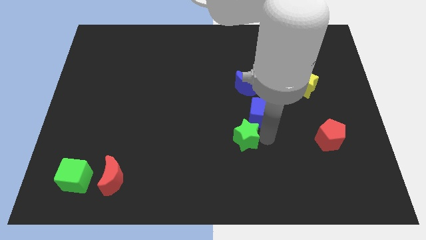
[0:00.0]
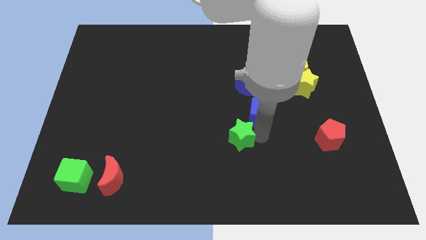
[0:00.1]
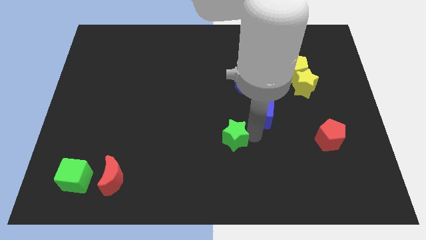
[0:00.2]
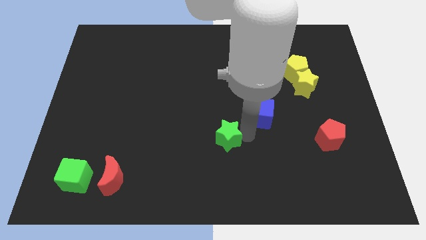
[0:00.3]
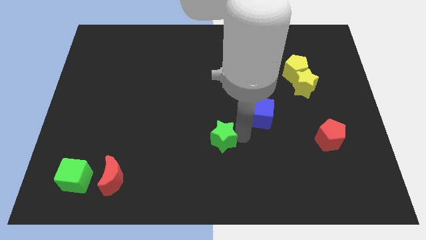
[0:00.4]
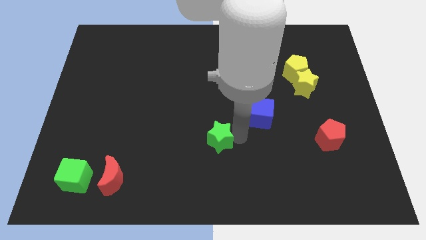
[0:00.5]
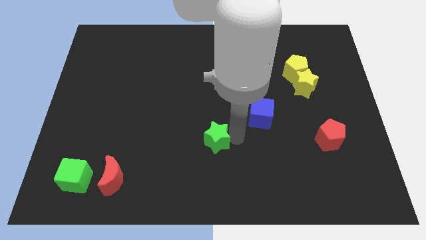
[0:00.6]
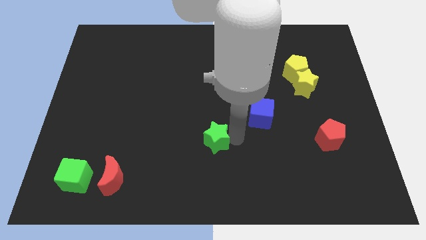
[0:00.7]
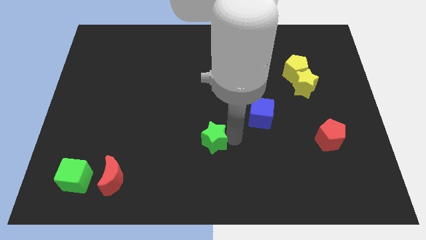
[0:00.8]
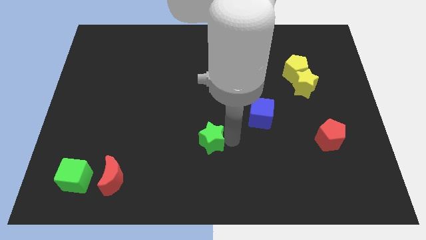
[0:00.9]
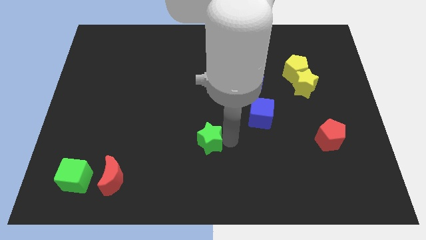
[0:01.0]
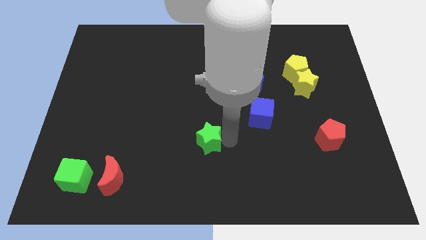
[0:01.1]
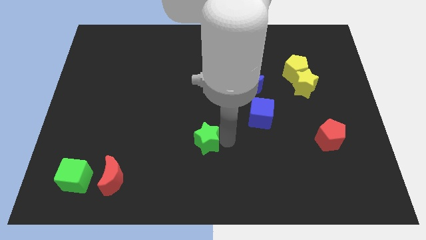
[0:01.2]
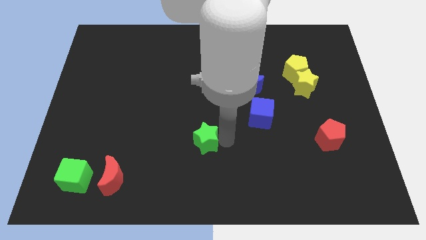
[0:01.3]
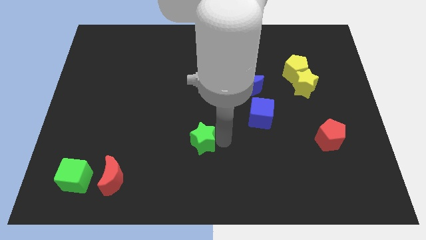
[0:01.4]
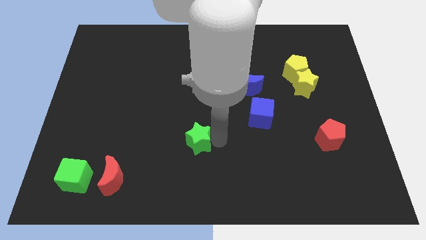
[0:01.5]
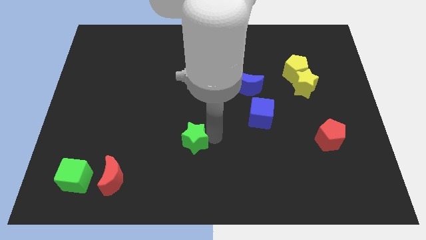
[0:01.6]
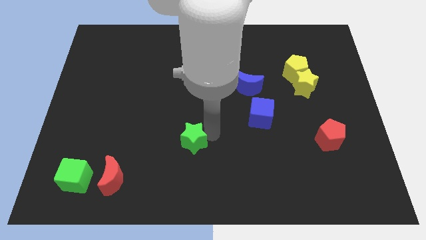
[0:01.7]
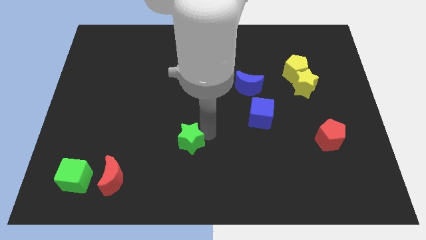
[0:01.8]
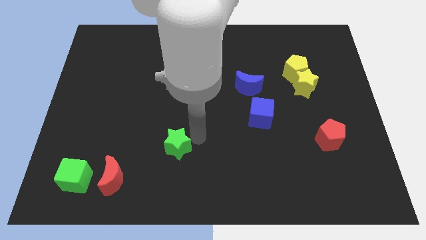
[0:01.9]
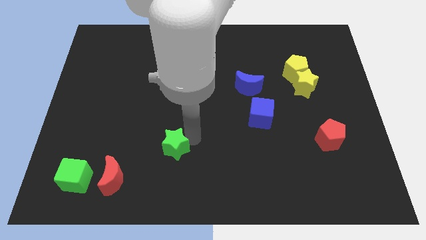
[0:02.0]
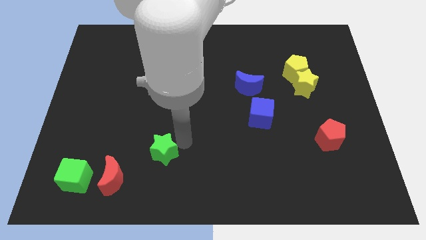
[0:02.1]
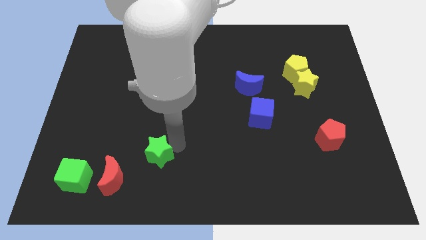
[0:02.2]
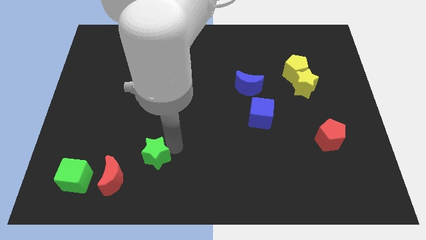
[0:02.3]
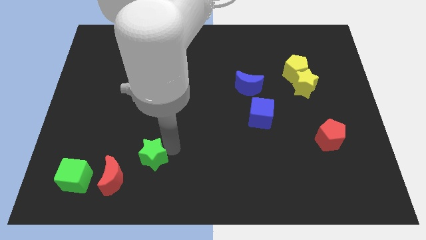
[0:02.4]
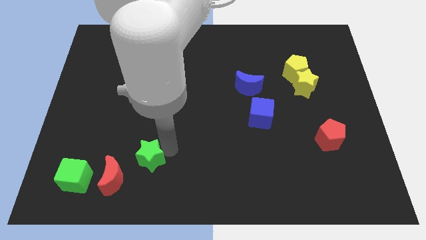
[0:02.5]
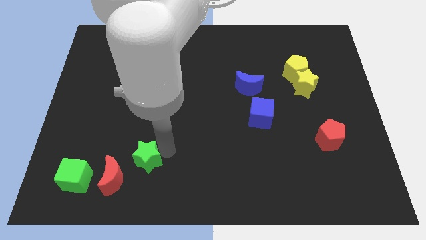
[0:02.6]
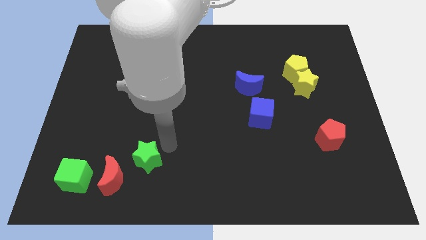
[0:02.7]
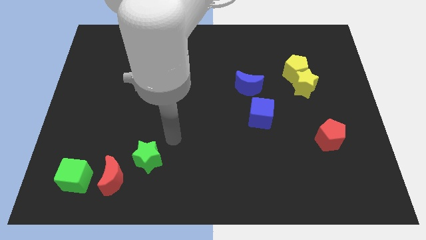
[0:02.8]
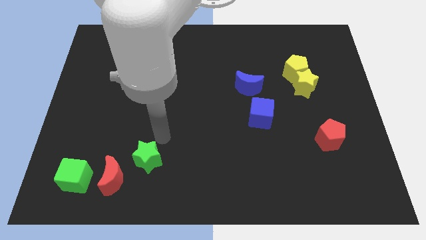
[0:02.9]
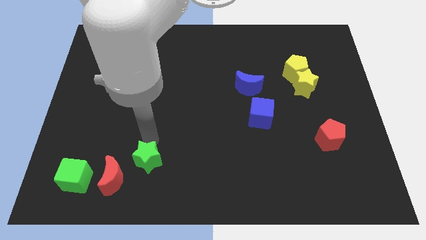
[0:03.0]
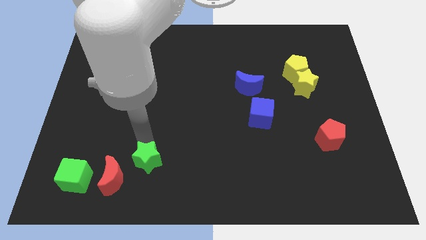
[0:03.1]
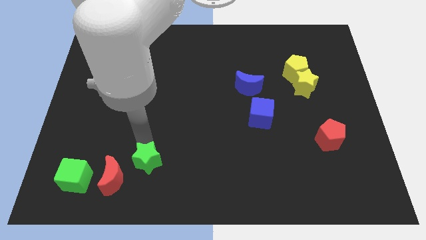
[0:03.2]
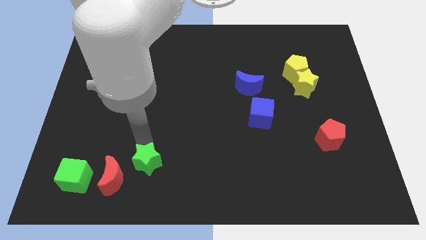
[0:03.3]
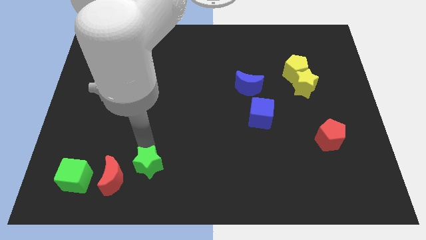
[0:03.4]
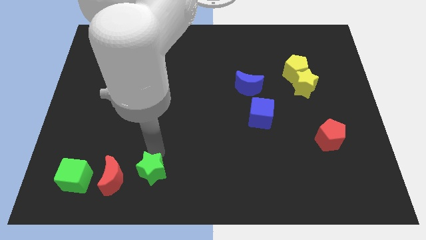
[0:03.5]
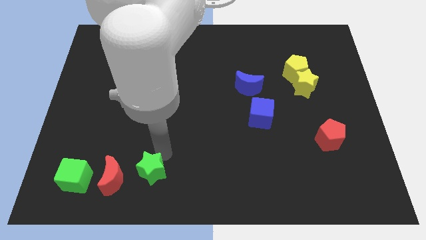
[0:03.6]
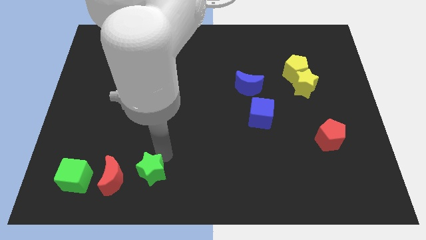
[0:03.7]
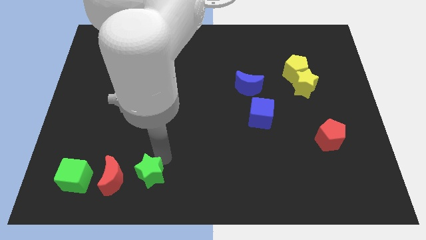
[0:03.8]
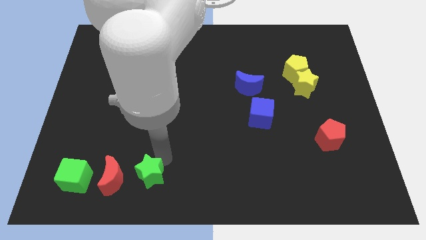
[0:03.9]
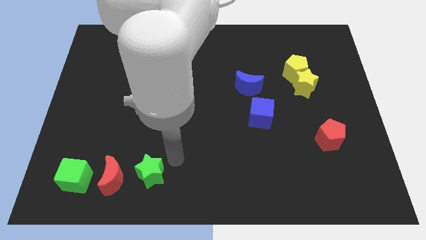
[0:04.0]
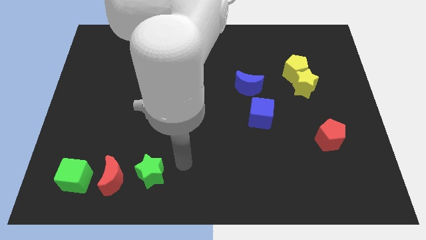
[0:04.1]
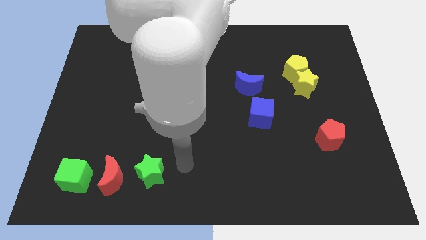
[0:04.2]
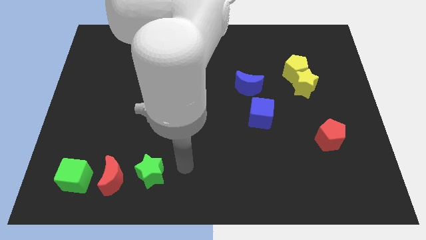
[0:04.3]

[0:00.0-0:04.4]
move green star to the right of red crescent

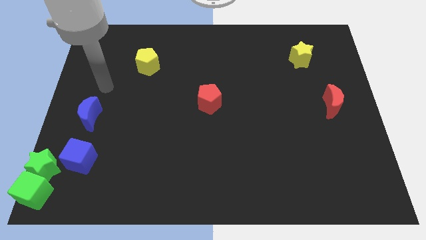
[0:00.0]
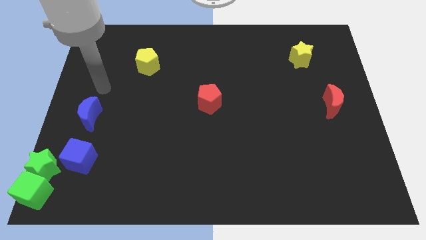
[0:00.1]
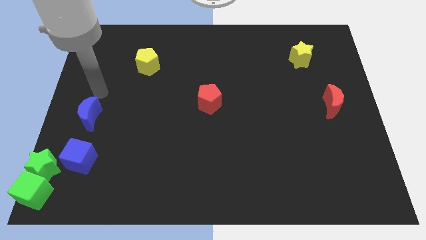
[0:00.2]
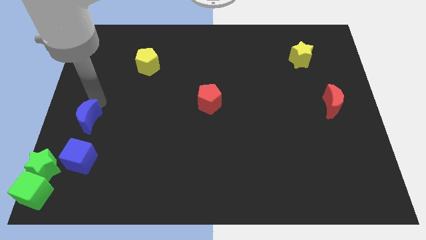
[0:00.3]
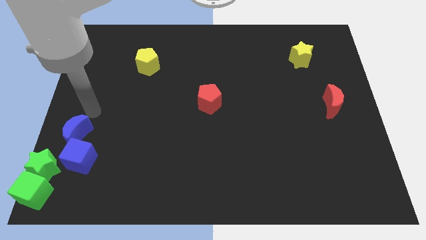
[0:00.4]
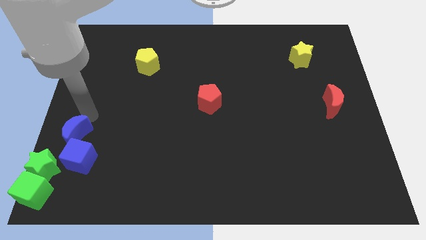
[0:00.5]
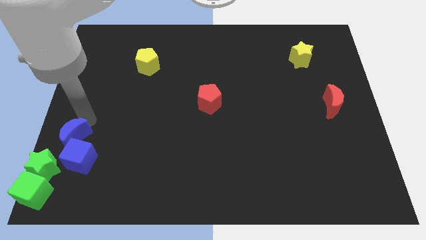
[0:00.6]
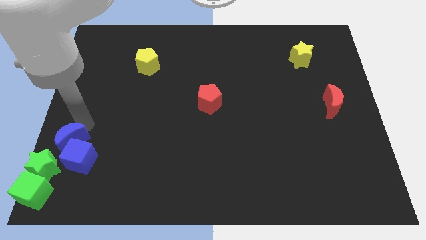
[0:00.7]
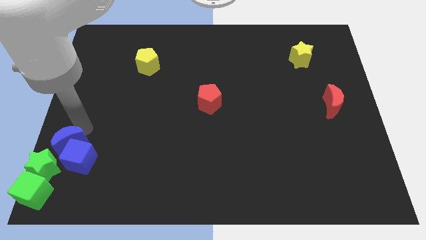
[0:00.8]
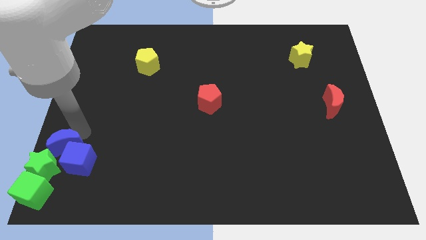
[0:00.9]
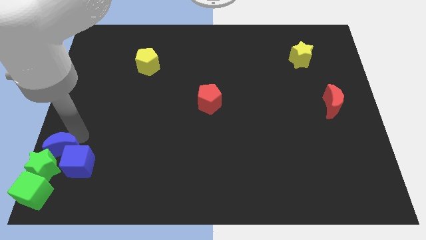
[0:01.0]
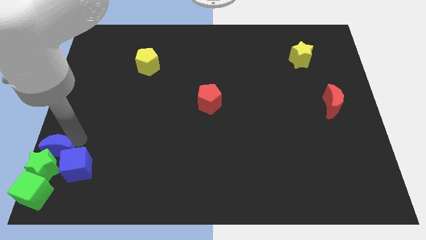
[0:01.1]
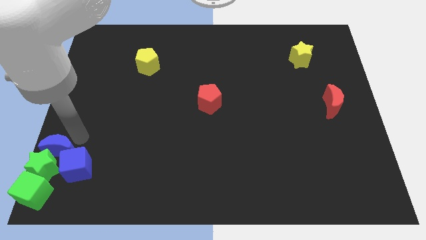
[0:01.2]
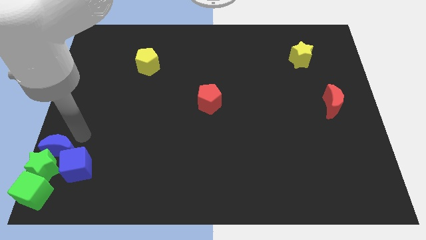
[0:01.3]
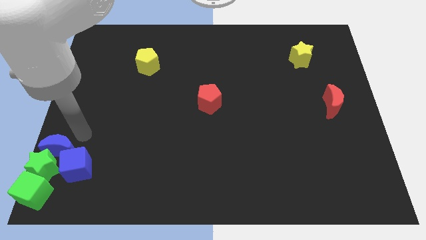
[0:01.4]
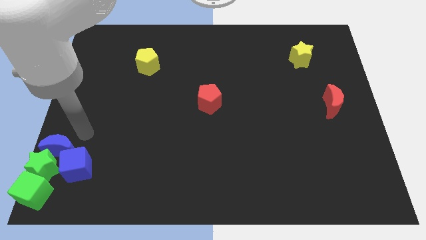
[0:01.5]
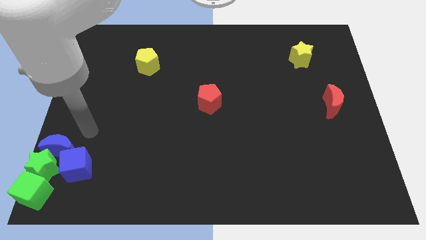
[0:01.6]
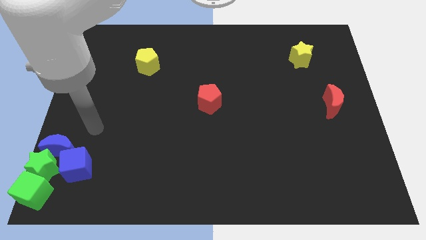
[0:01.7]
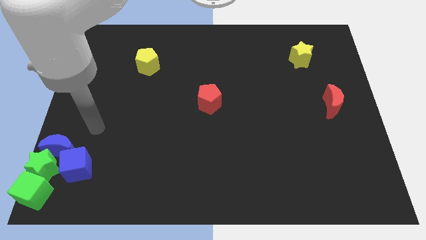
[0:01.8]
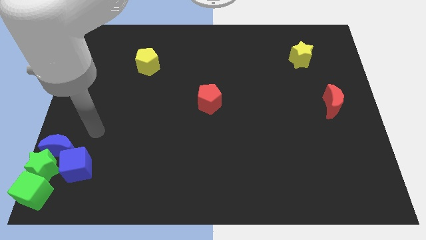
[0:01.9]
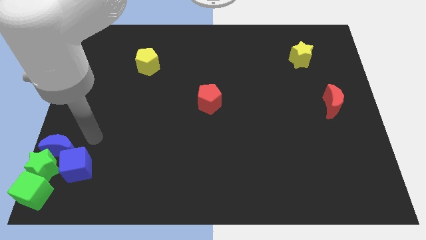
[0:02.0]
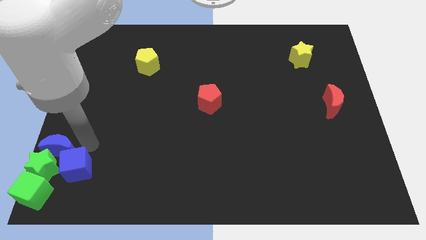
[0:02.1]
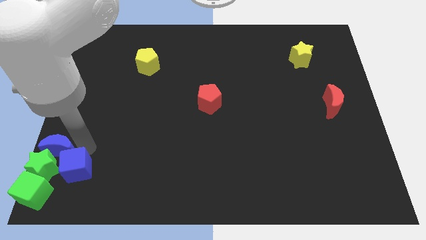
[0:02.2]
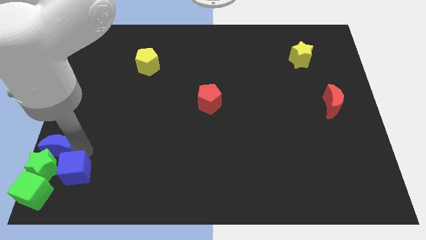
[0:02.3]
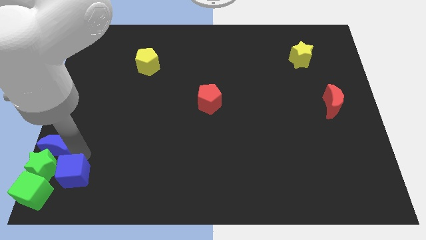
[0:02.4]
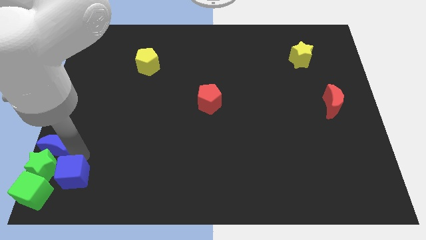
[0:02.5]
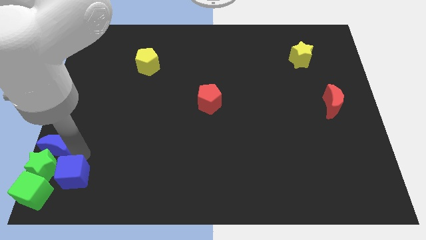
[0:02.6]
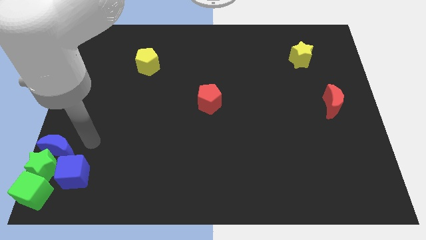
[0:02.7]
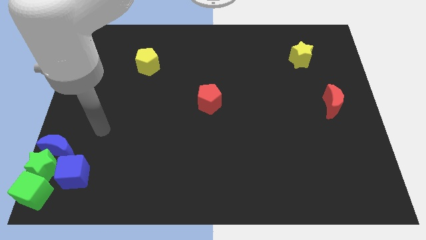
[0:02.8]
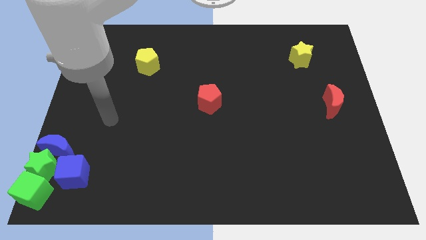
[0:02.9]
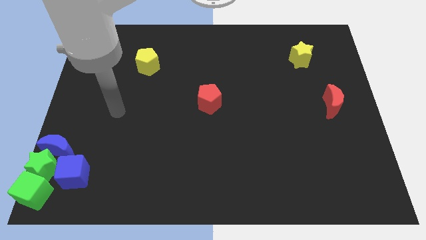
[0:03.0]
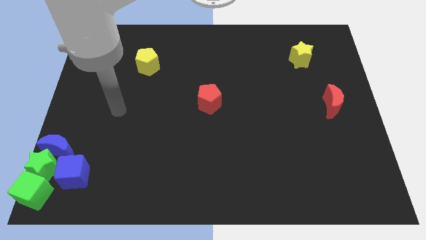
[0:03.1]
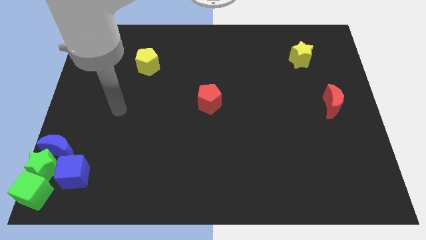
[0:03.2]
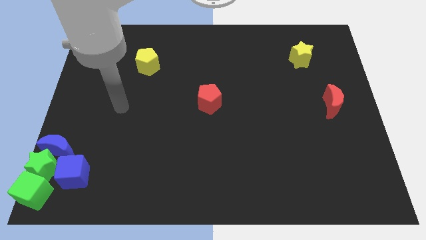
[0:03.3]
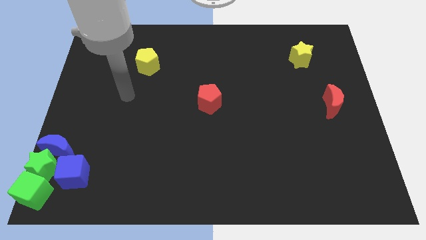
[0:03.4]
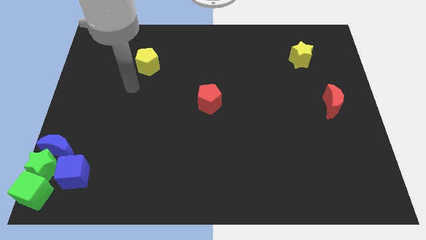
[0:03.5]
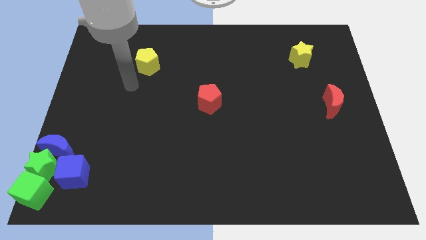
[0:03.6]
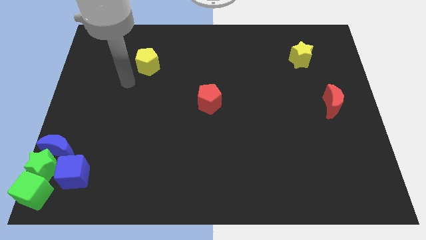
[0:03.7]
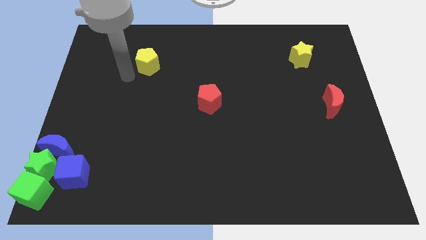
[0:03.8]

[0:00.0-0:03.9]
make a group of green cube green star blue cube and blue crescent

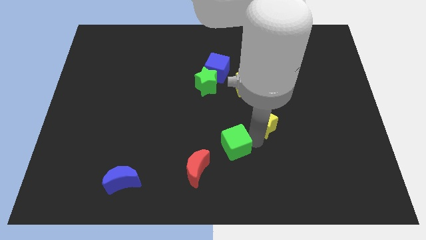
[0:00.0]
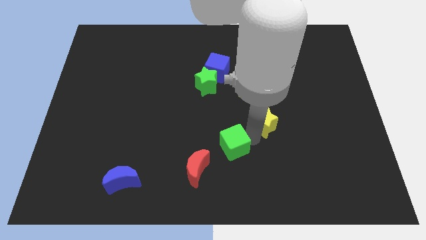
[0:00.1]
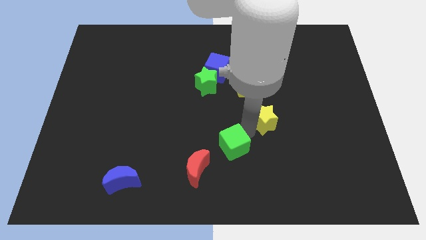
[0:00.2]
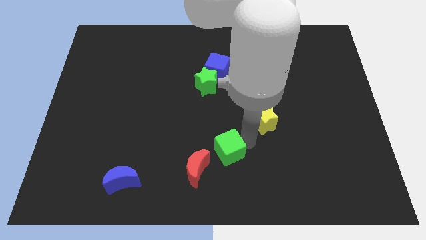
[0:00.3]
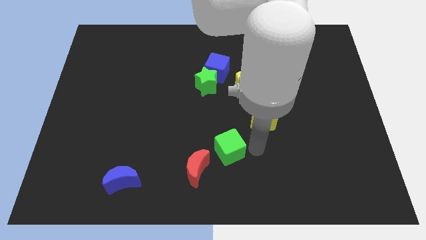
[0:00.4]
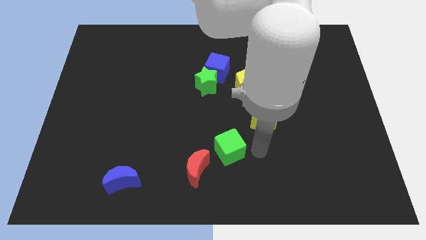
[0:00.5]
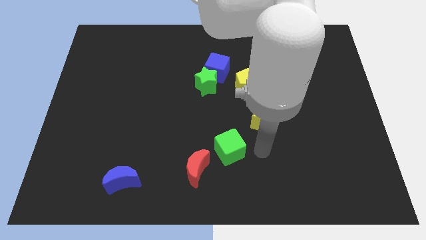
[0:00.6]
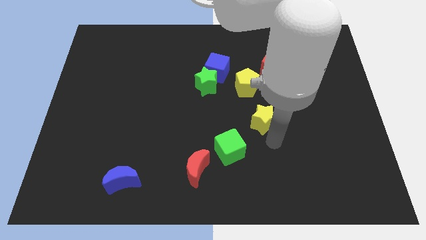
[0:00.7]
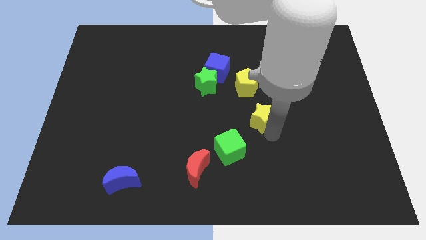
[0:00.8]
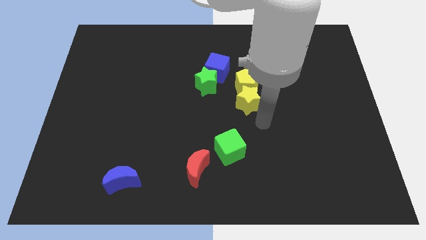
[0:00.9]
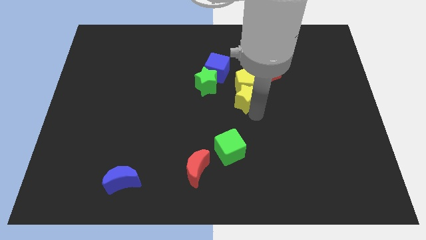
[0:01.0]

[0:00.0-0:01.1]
move the yellow star into the bottom of the yellow pentagon
